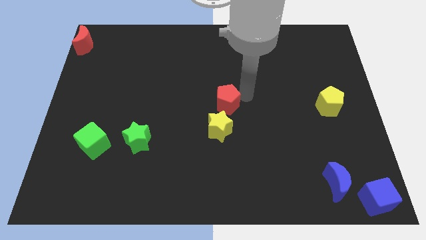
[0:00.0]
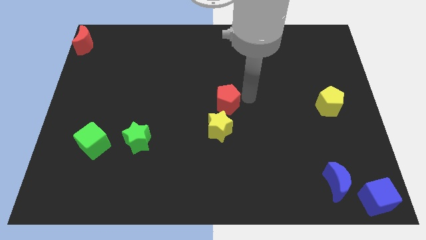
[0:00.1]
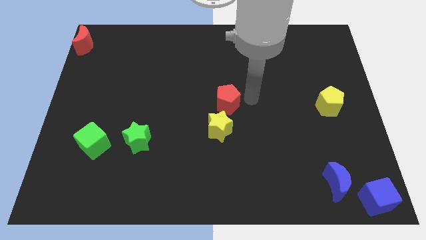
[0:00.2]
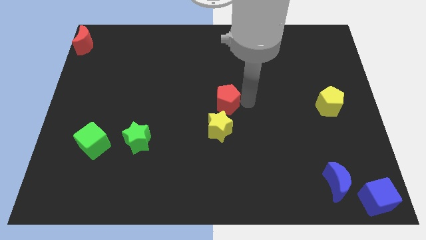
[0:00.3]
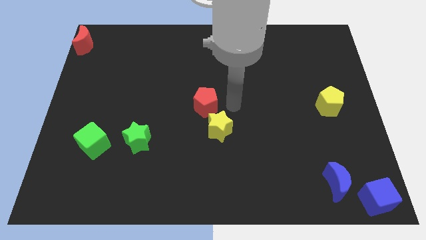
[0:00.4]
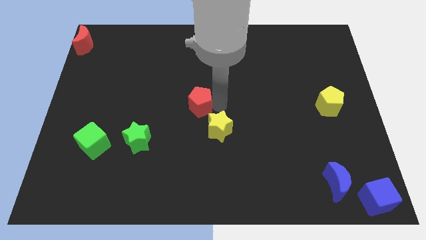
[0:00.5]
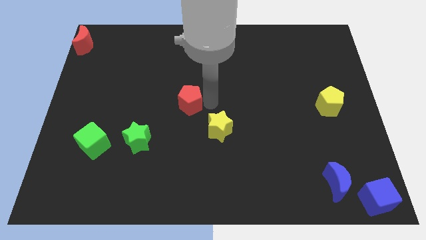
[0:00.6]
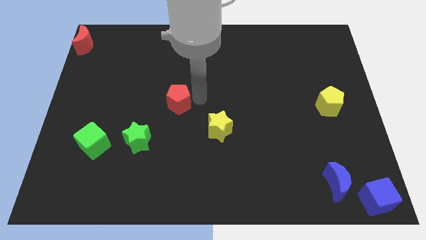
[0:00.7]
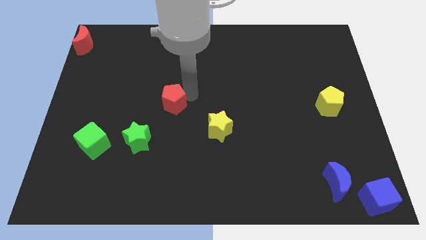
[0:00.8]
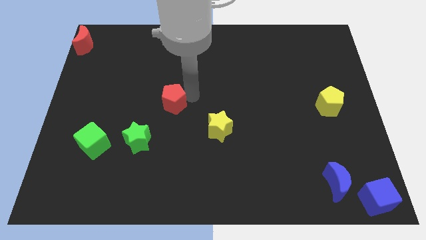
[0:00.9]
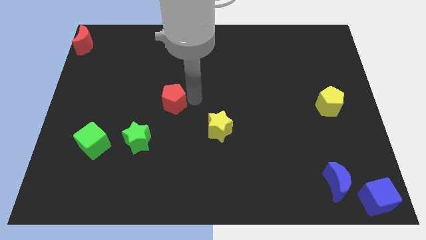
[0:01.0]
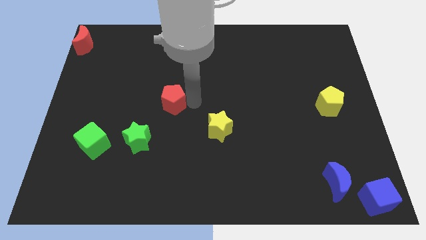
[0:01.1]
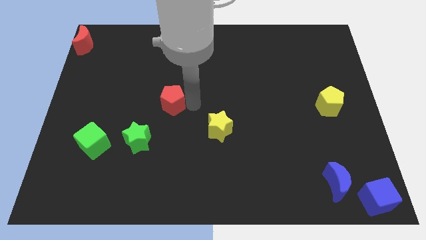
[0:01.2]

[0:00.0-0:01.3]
make a triangle by placing red pentagon

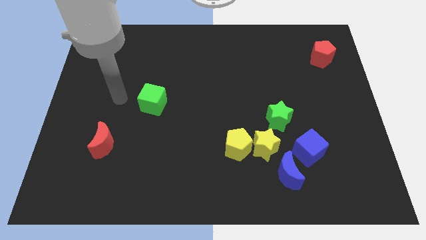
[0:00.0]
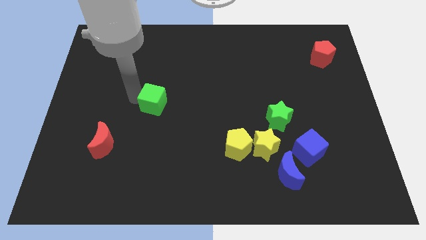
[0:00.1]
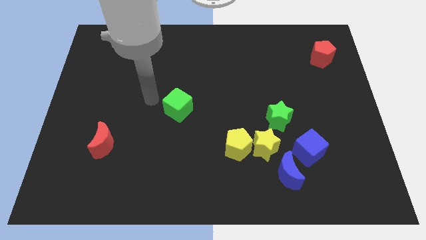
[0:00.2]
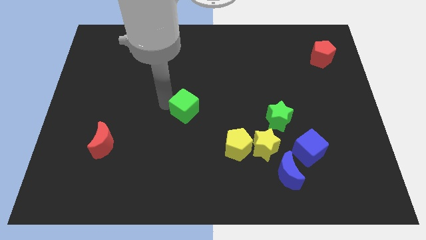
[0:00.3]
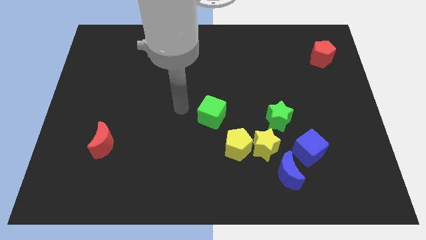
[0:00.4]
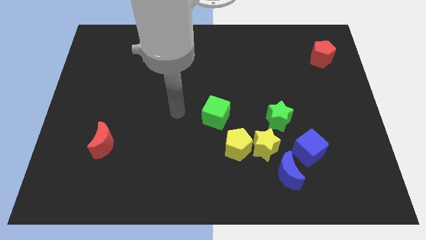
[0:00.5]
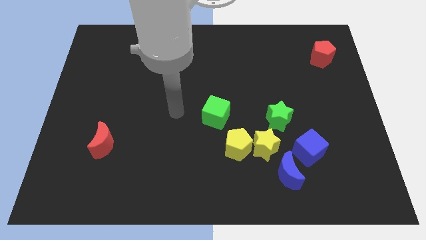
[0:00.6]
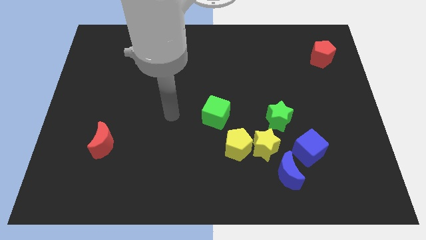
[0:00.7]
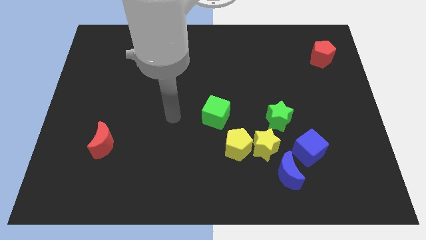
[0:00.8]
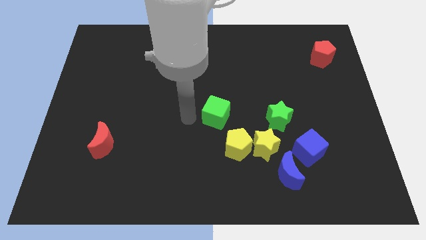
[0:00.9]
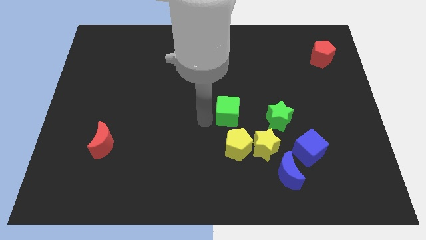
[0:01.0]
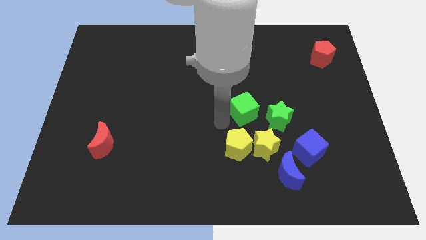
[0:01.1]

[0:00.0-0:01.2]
place the green cube above the yellow pentagon

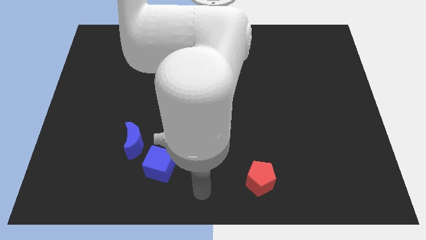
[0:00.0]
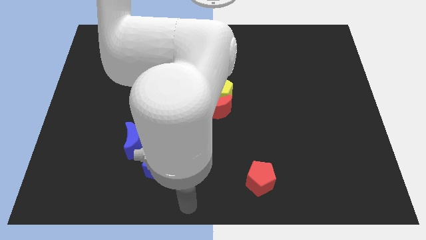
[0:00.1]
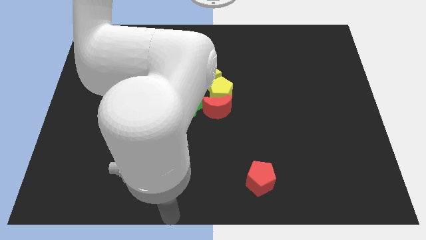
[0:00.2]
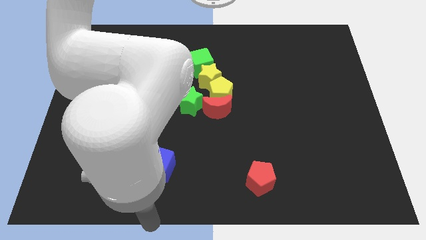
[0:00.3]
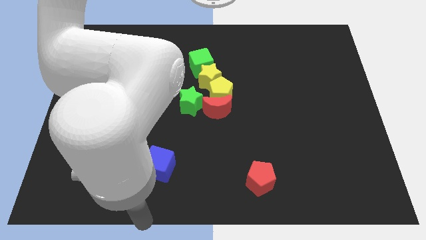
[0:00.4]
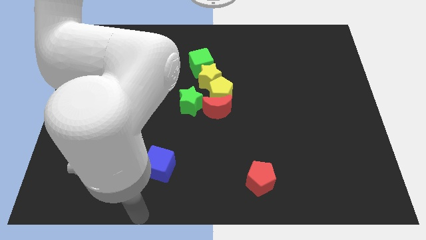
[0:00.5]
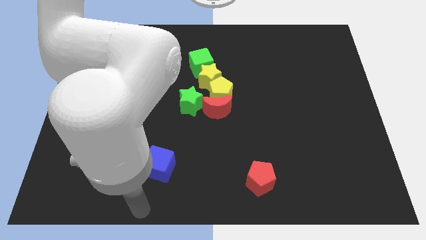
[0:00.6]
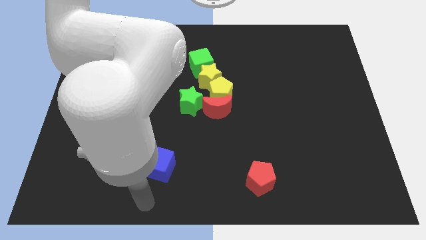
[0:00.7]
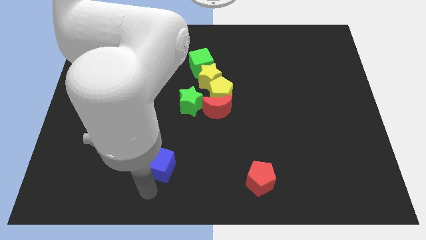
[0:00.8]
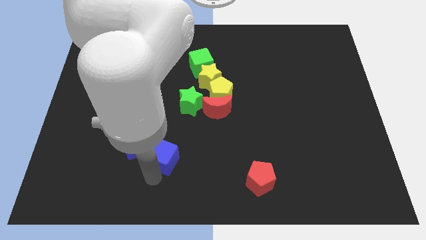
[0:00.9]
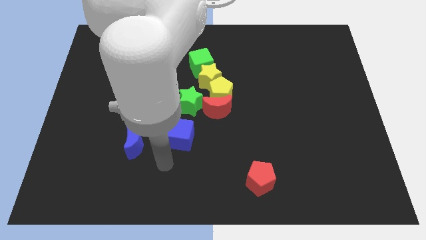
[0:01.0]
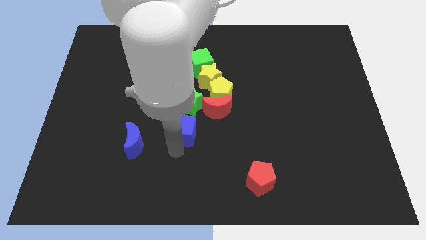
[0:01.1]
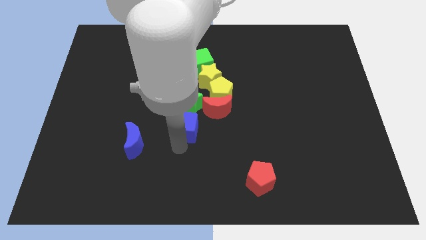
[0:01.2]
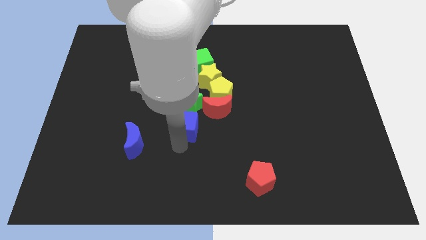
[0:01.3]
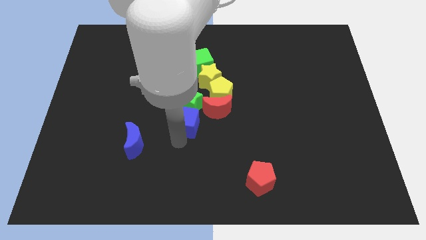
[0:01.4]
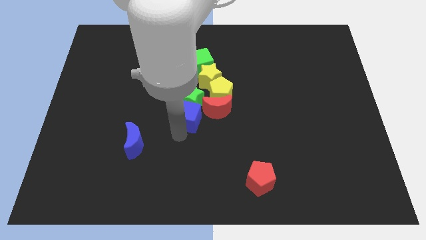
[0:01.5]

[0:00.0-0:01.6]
push blue cube into the green star

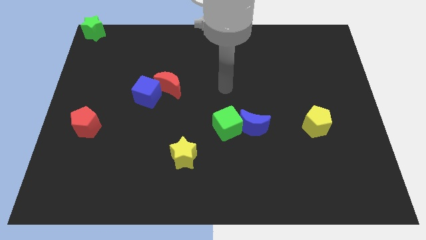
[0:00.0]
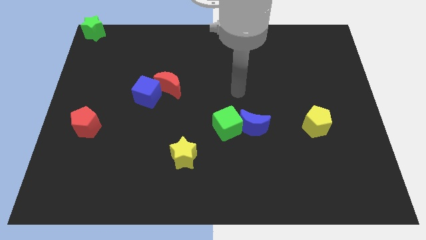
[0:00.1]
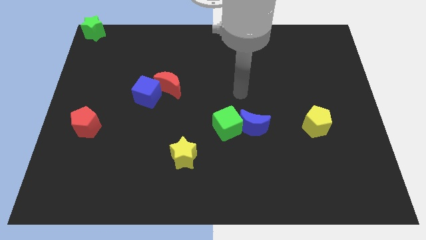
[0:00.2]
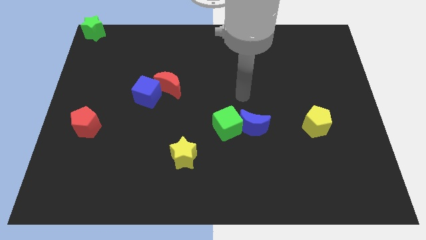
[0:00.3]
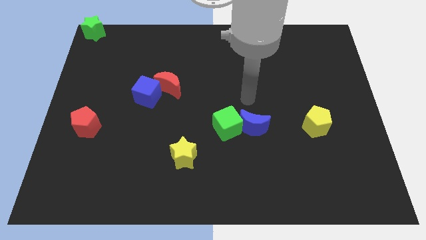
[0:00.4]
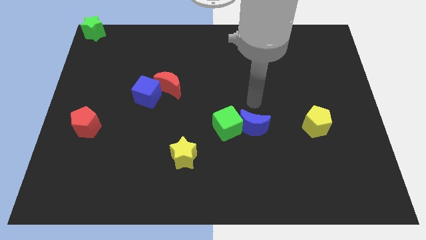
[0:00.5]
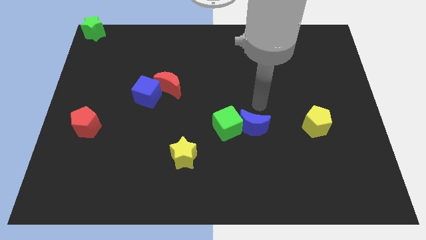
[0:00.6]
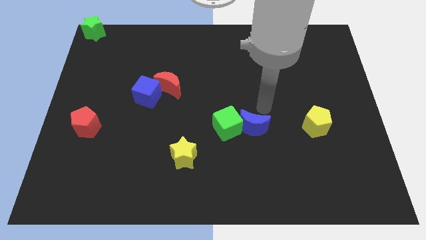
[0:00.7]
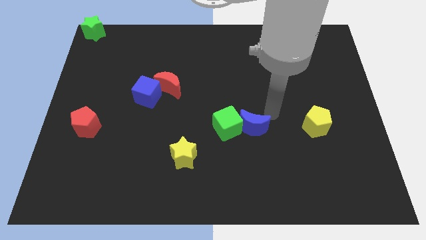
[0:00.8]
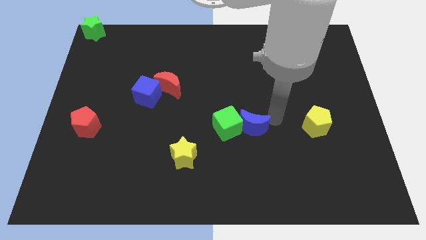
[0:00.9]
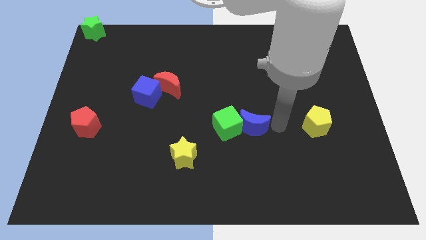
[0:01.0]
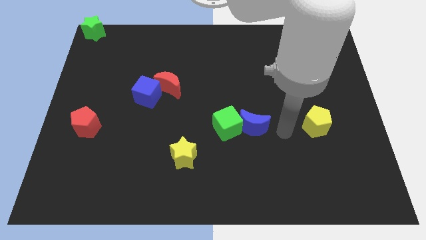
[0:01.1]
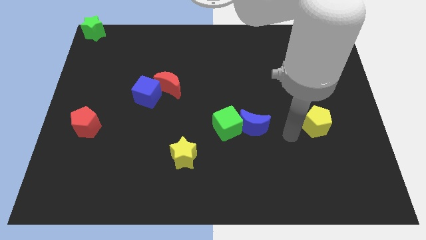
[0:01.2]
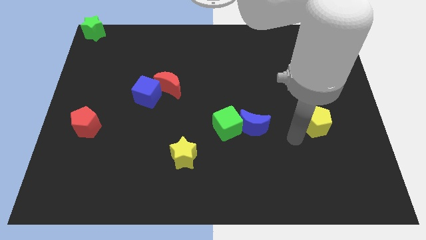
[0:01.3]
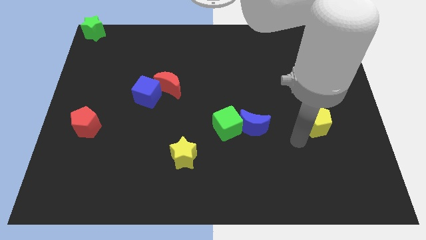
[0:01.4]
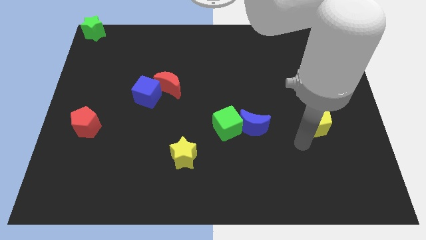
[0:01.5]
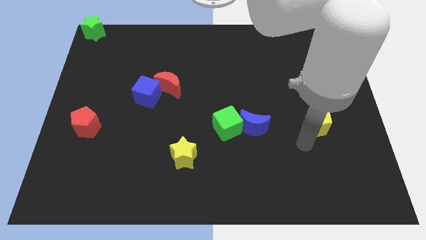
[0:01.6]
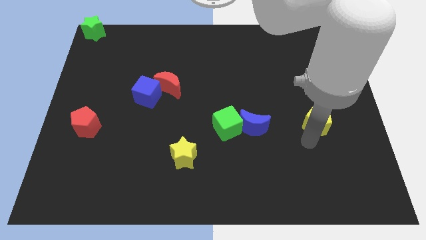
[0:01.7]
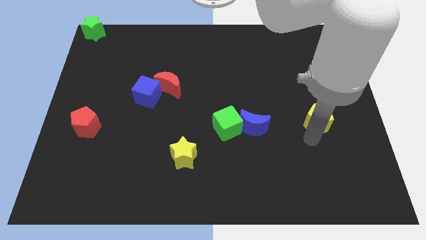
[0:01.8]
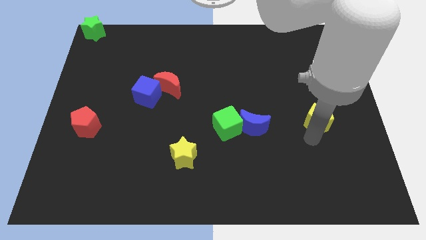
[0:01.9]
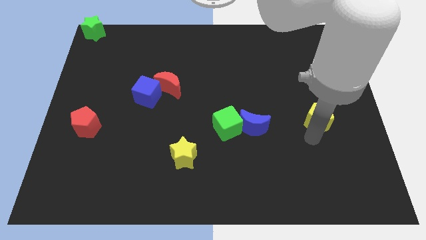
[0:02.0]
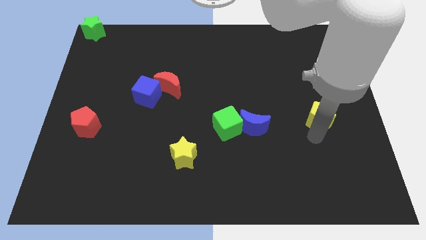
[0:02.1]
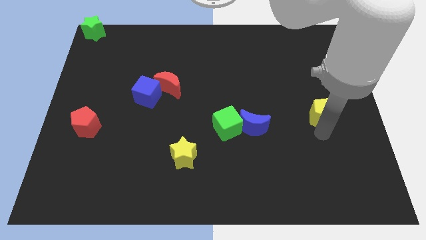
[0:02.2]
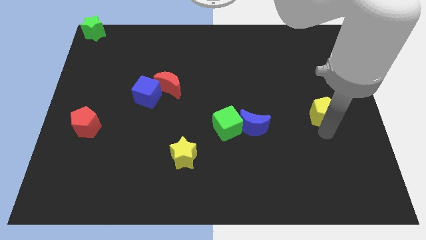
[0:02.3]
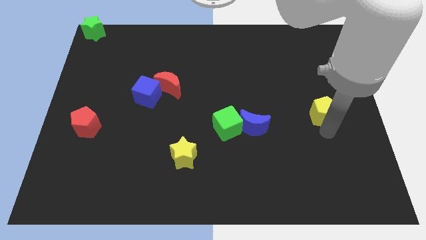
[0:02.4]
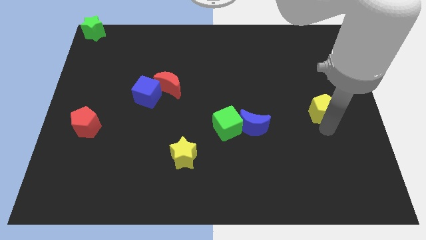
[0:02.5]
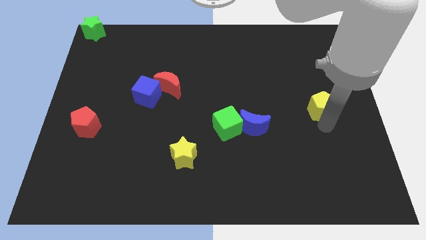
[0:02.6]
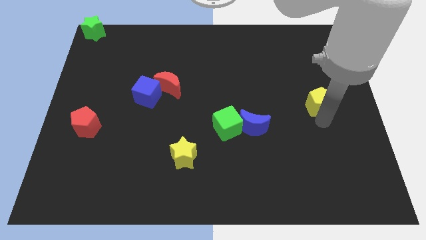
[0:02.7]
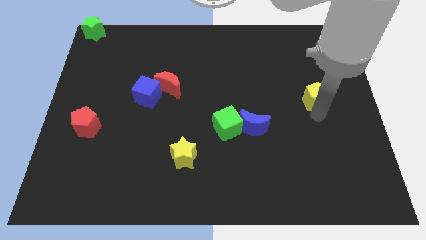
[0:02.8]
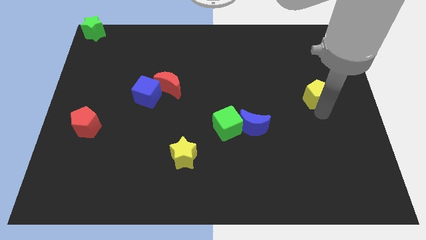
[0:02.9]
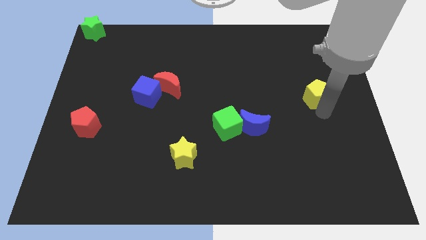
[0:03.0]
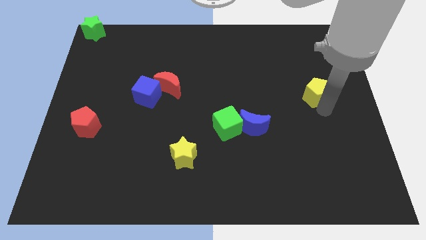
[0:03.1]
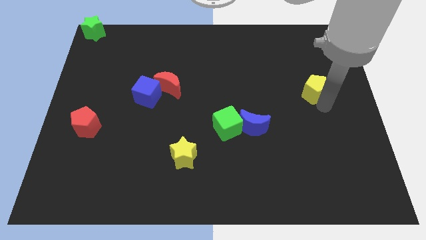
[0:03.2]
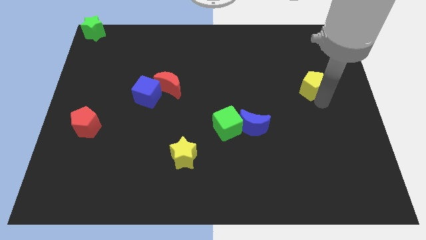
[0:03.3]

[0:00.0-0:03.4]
push the yellow pentagon diagonally on the top right side of the blue moon

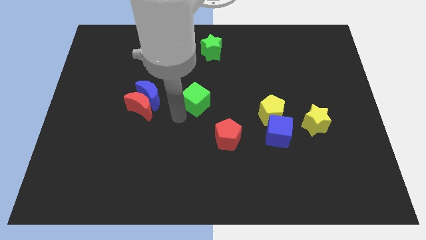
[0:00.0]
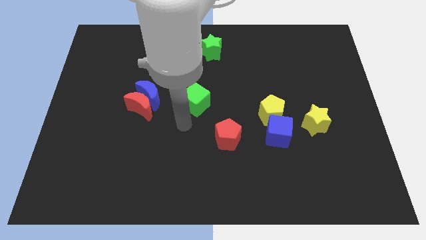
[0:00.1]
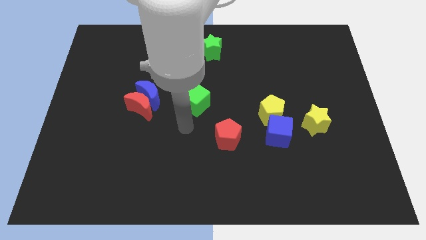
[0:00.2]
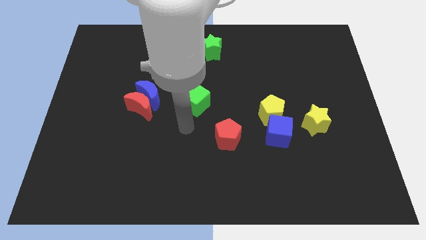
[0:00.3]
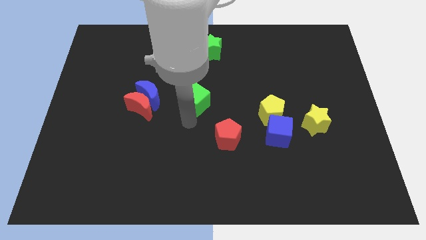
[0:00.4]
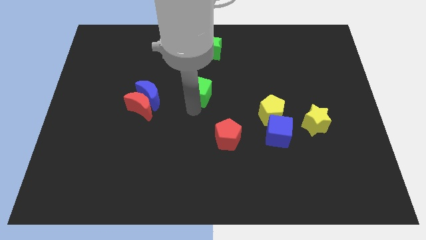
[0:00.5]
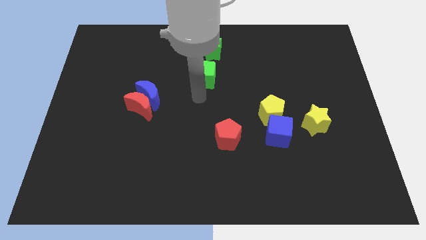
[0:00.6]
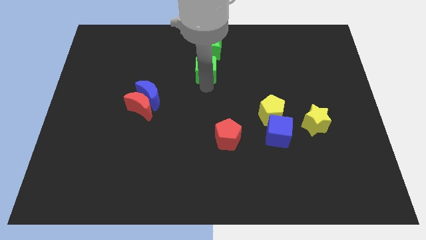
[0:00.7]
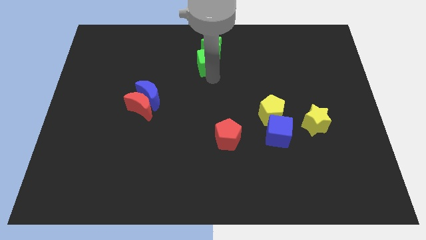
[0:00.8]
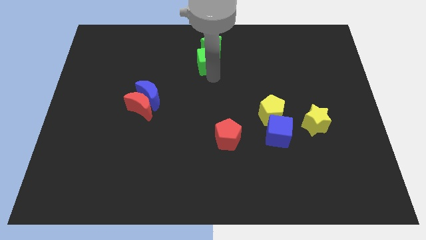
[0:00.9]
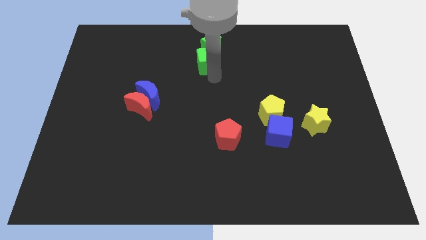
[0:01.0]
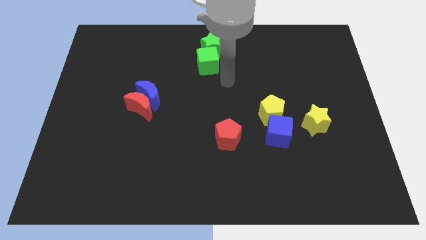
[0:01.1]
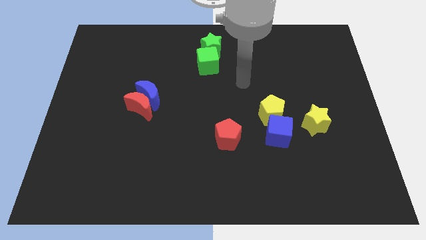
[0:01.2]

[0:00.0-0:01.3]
push the green cube into the green star

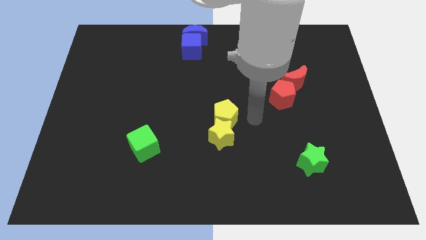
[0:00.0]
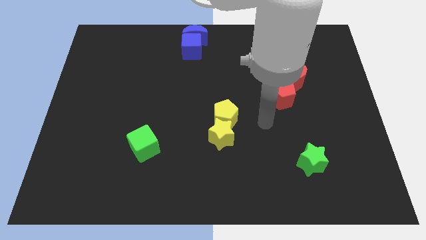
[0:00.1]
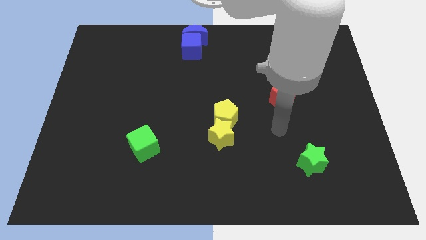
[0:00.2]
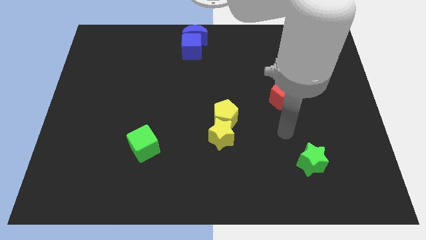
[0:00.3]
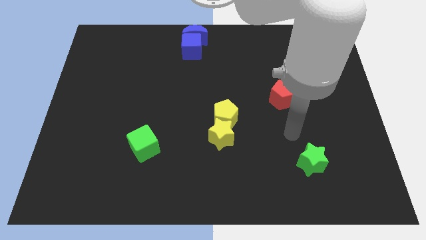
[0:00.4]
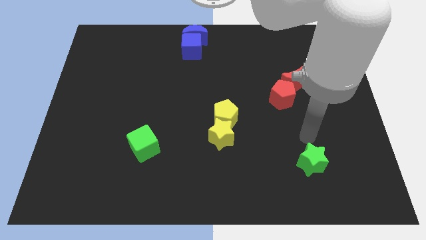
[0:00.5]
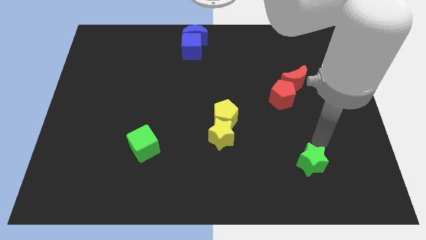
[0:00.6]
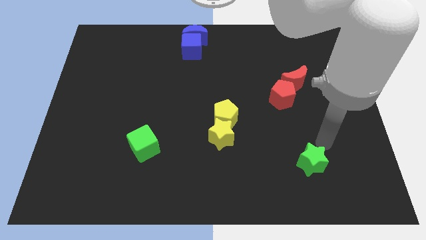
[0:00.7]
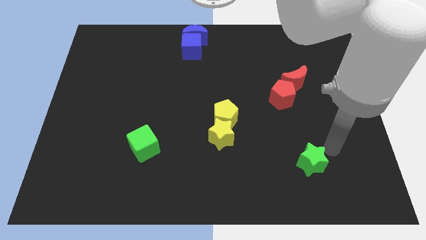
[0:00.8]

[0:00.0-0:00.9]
point your arm at the top right side of green star
